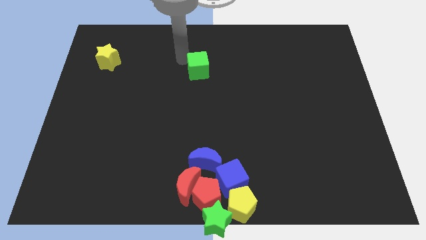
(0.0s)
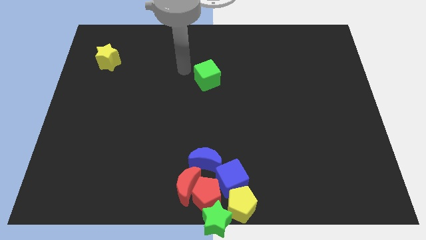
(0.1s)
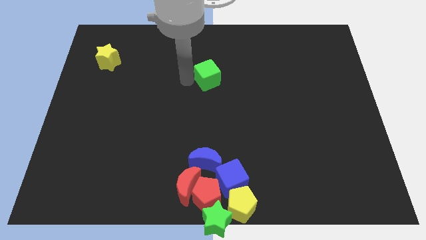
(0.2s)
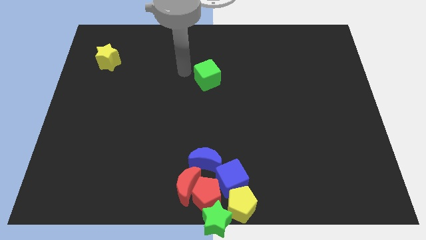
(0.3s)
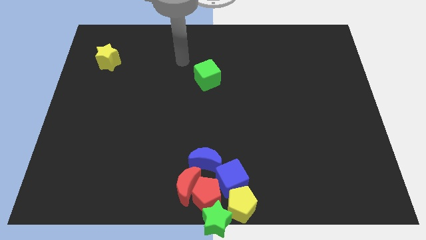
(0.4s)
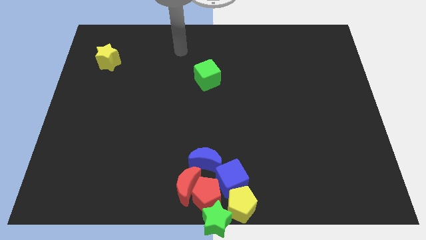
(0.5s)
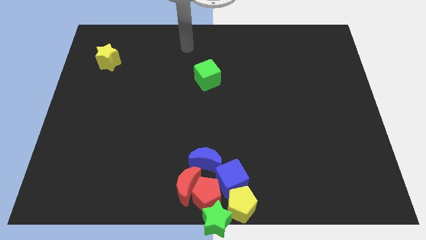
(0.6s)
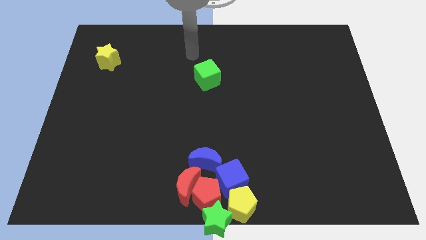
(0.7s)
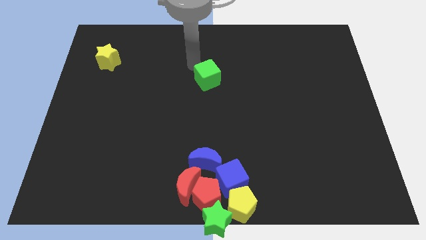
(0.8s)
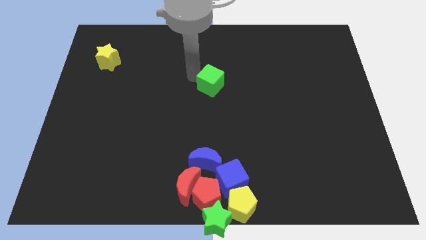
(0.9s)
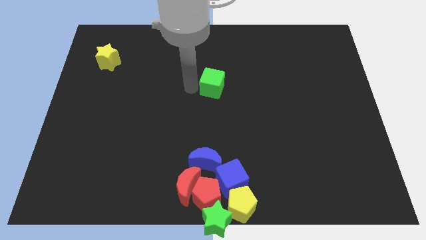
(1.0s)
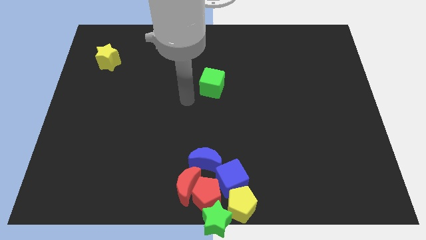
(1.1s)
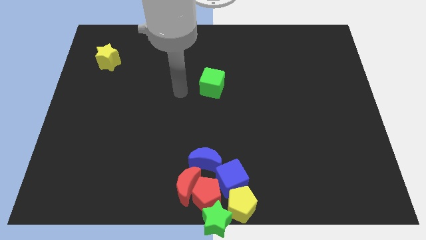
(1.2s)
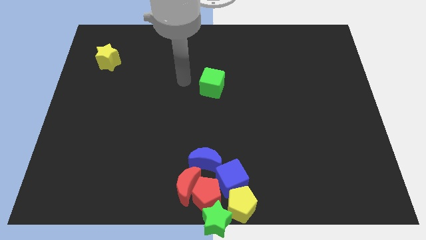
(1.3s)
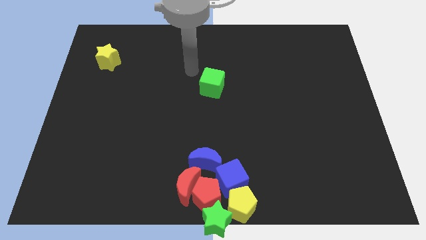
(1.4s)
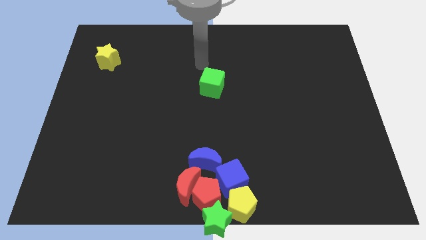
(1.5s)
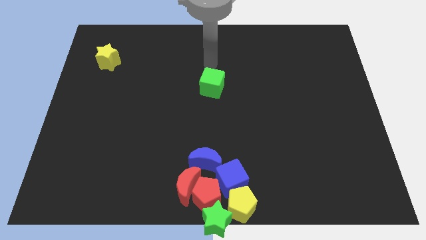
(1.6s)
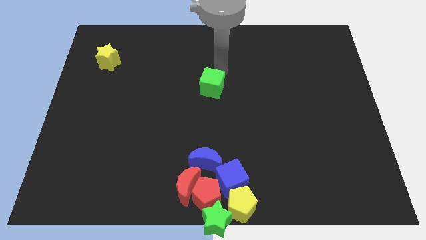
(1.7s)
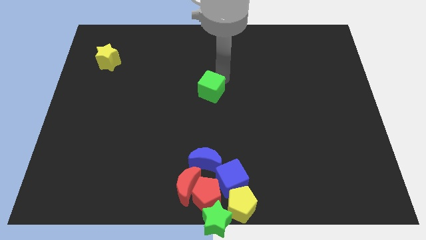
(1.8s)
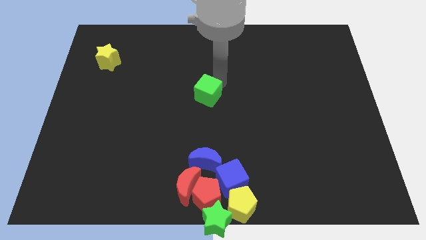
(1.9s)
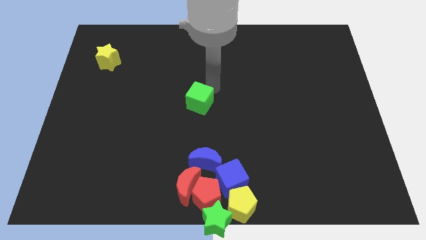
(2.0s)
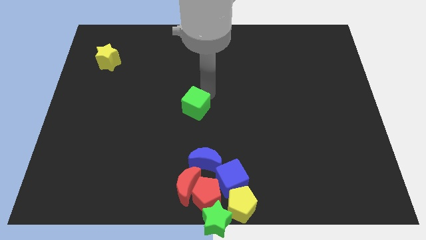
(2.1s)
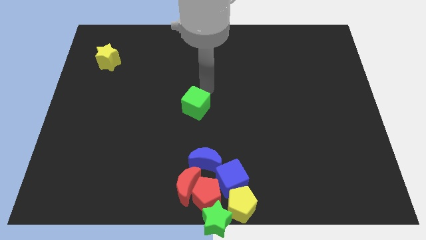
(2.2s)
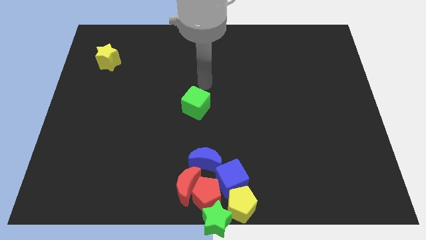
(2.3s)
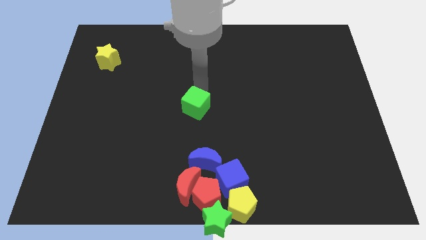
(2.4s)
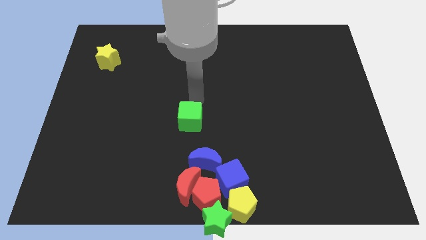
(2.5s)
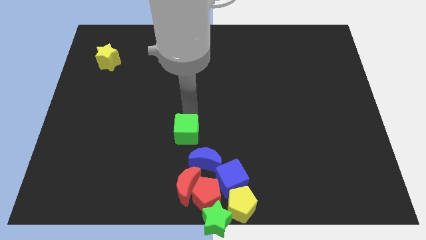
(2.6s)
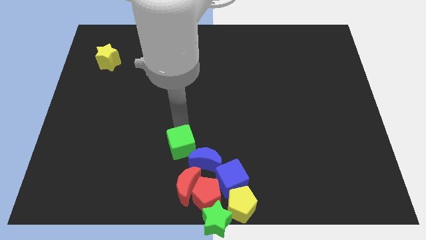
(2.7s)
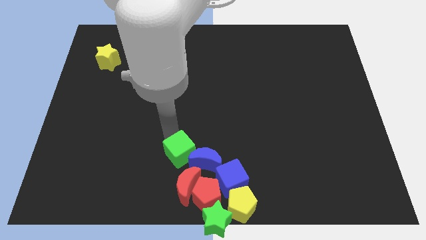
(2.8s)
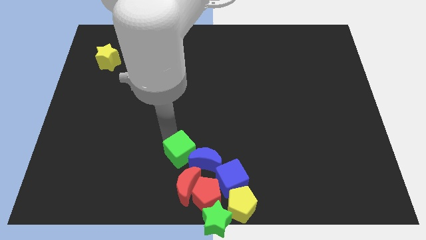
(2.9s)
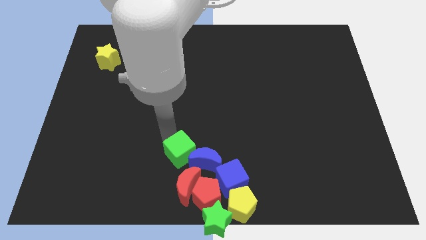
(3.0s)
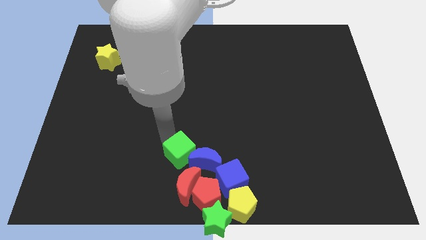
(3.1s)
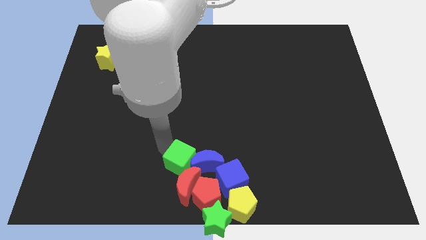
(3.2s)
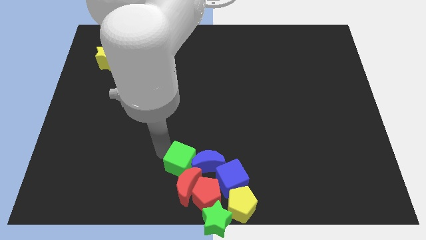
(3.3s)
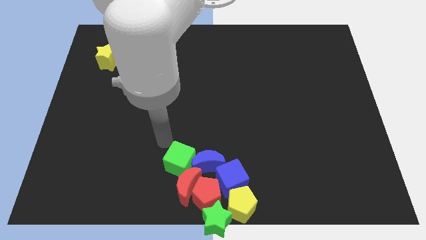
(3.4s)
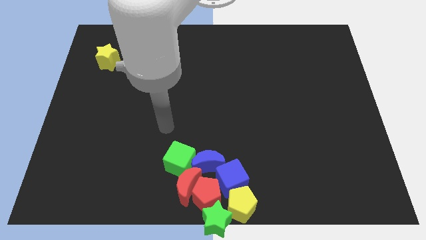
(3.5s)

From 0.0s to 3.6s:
group up all the blocks except yellow star

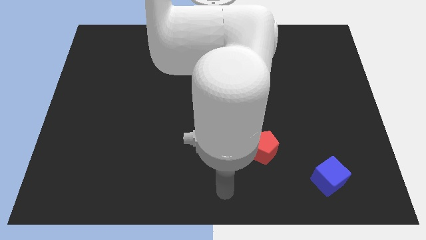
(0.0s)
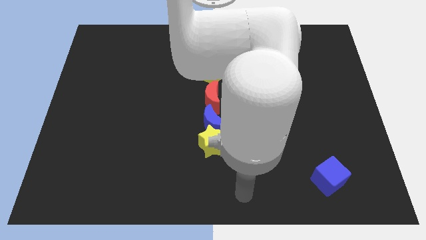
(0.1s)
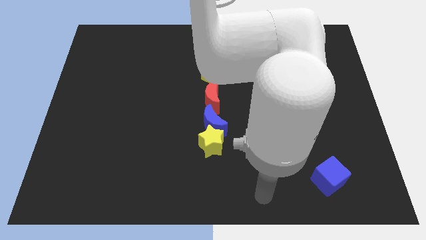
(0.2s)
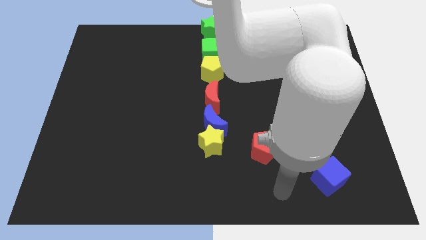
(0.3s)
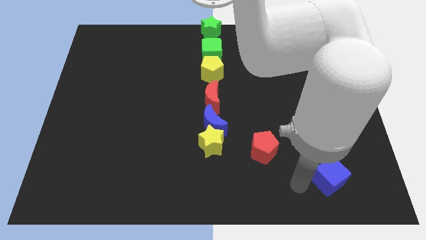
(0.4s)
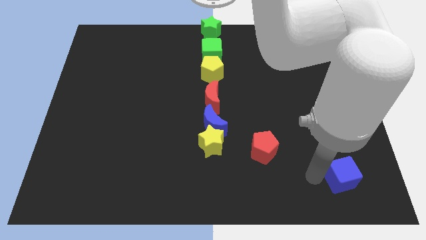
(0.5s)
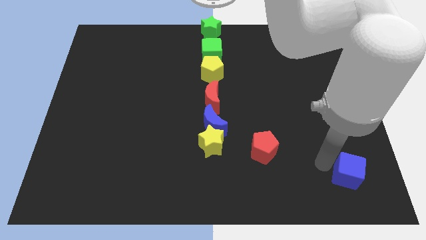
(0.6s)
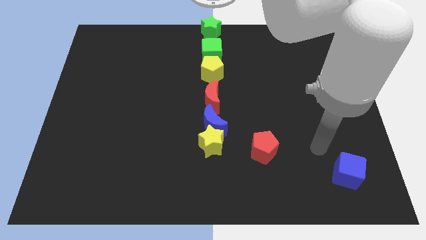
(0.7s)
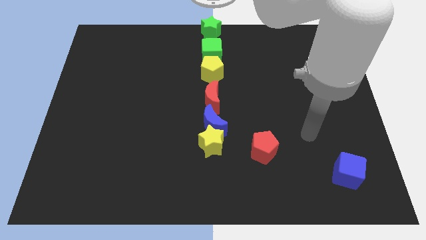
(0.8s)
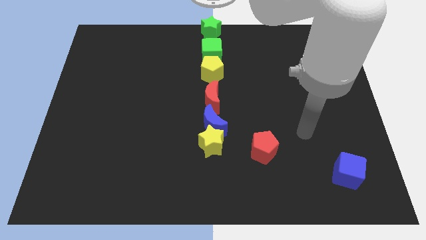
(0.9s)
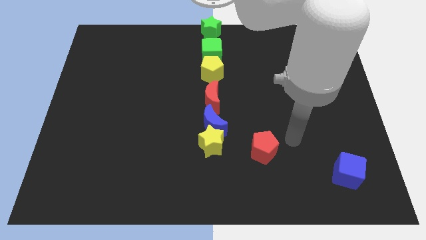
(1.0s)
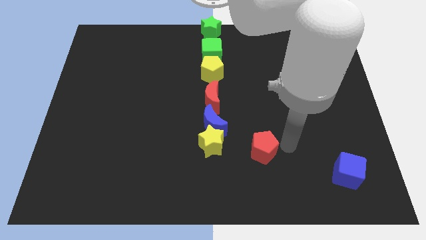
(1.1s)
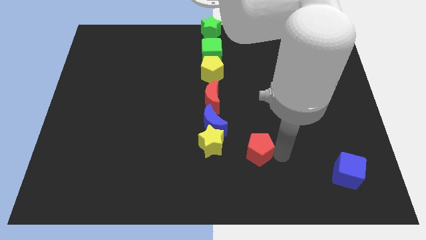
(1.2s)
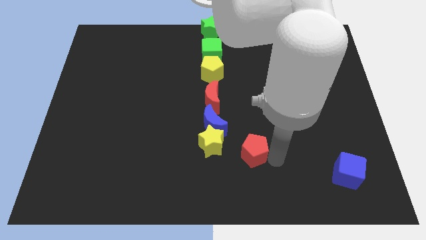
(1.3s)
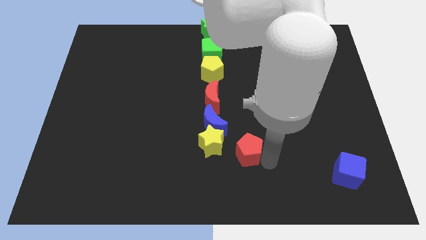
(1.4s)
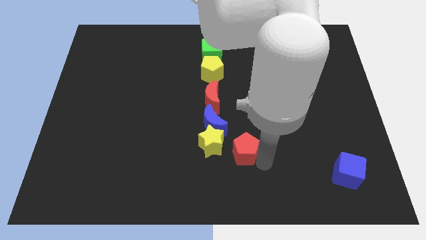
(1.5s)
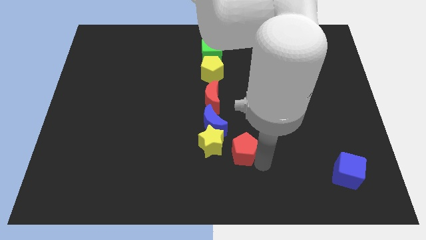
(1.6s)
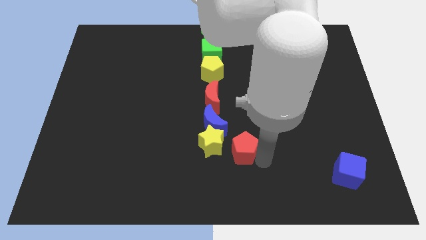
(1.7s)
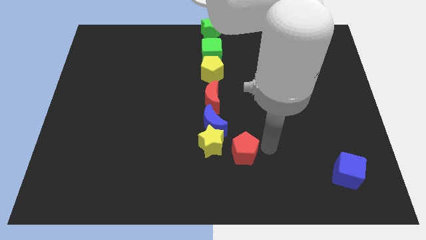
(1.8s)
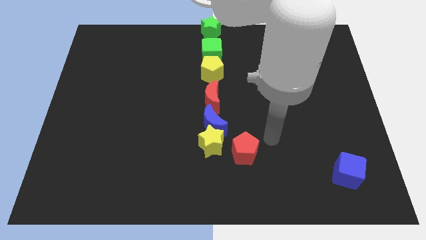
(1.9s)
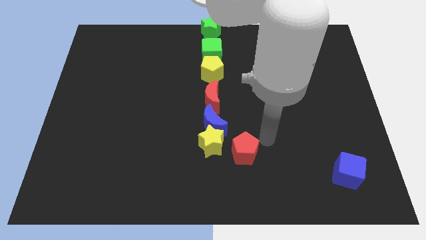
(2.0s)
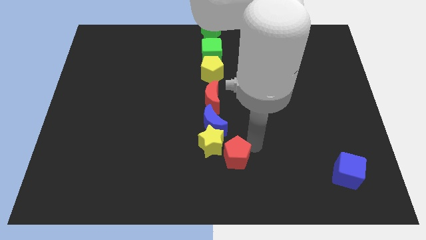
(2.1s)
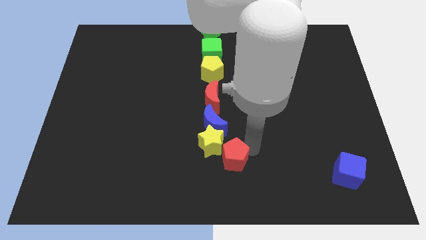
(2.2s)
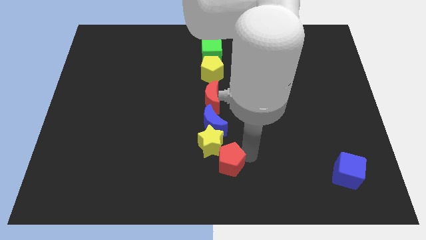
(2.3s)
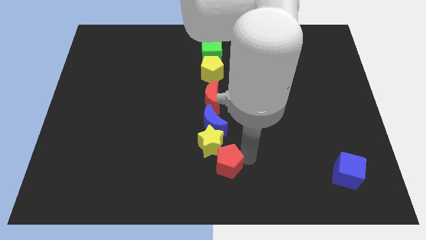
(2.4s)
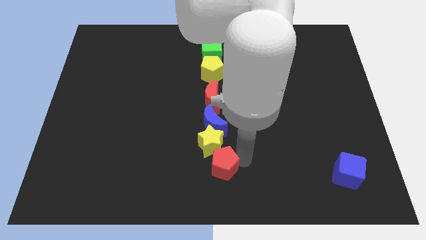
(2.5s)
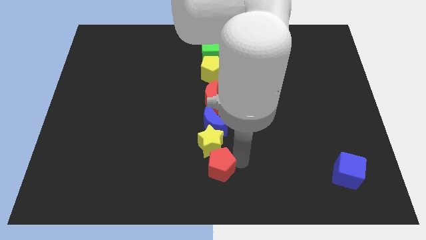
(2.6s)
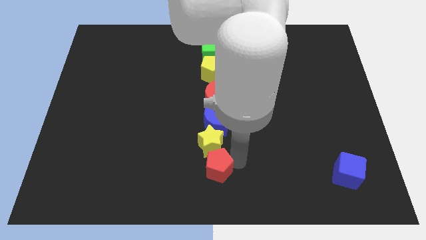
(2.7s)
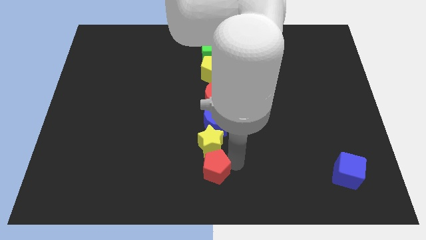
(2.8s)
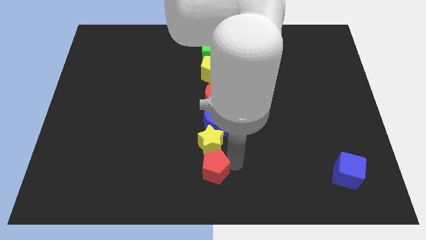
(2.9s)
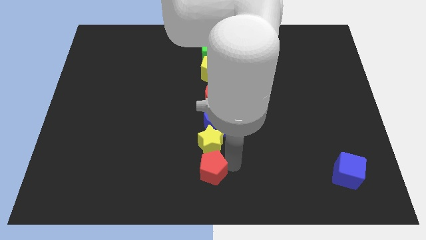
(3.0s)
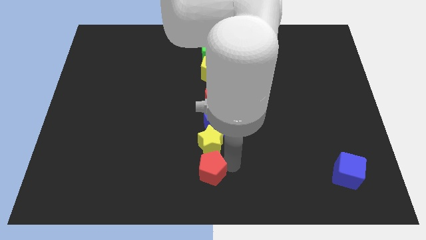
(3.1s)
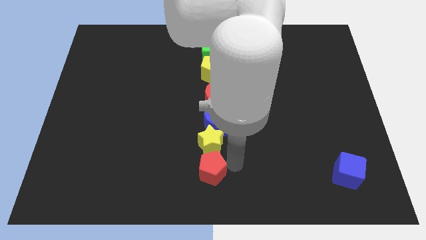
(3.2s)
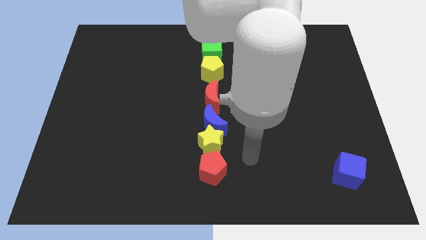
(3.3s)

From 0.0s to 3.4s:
push the blue cube and move the red pentagon below the yellow star

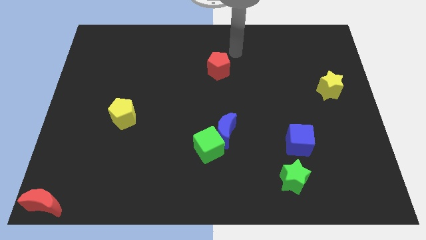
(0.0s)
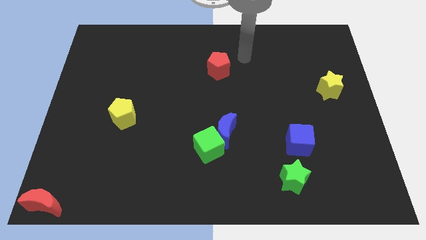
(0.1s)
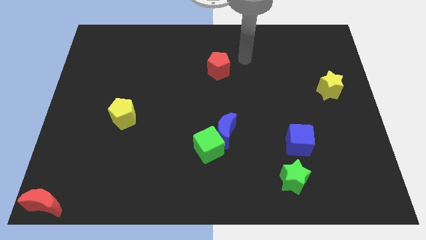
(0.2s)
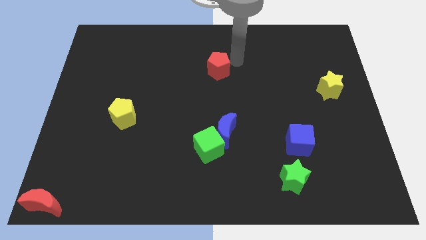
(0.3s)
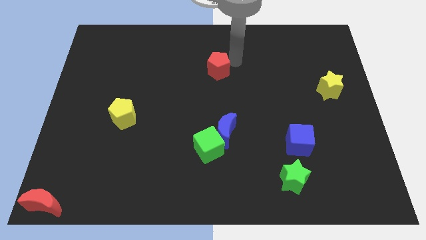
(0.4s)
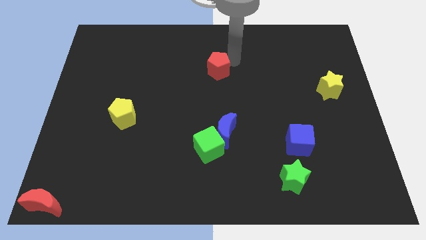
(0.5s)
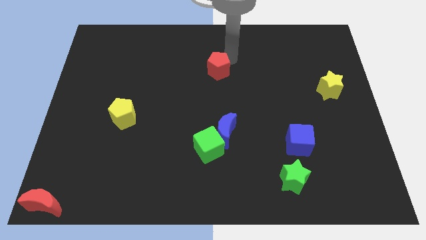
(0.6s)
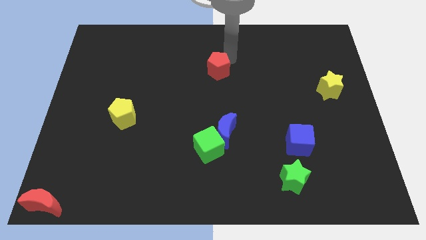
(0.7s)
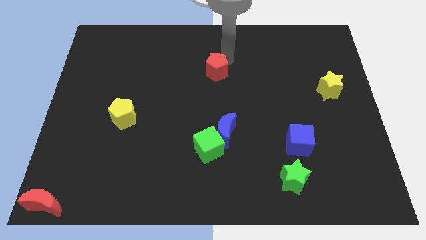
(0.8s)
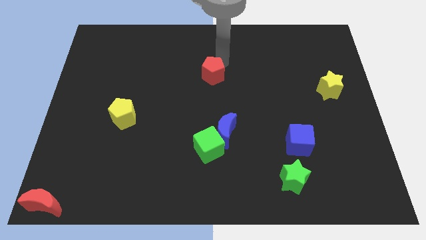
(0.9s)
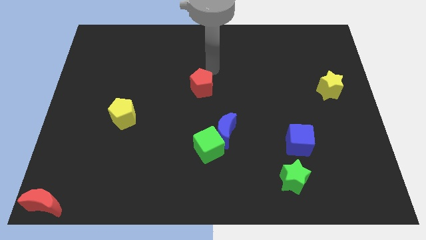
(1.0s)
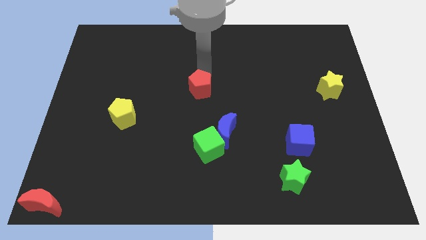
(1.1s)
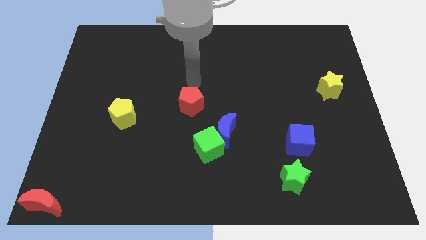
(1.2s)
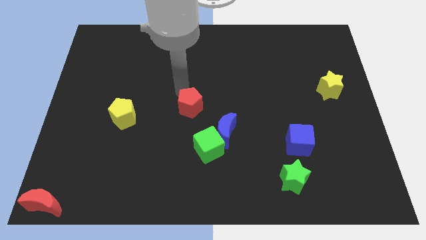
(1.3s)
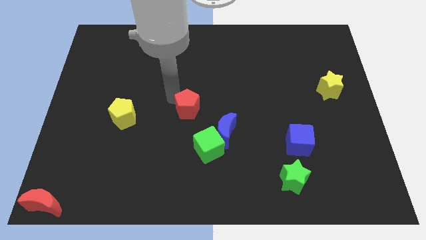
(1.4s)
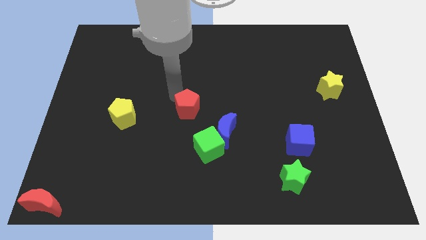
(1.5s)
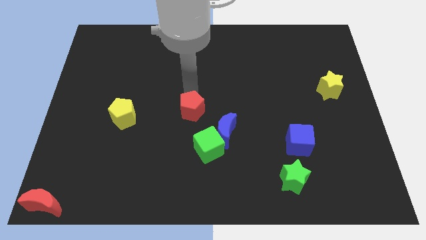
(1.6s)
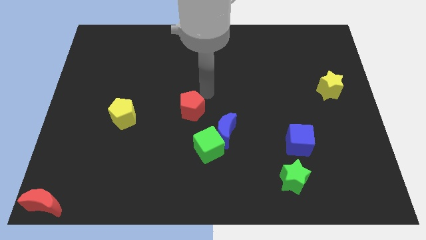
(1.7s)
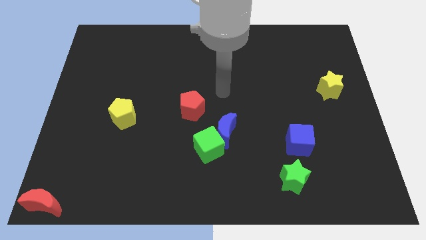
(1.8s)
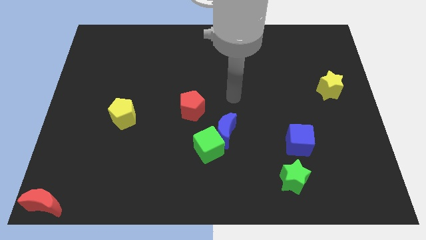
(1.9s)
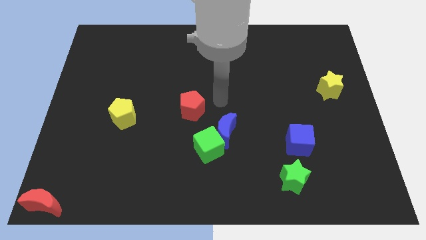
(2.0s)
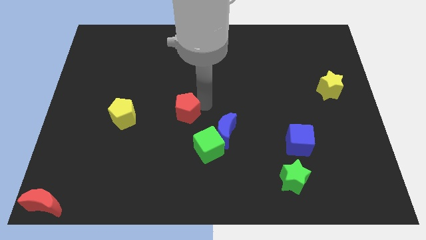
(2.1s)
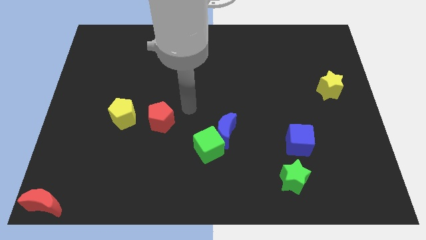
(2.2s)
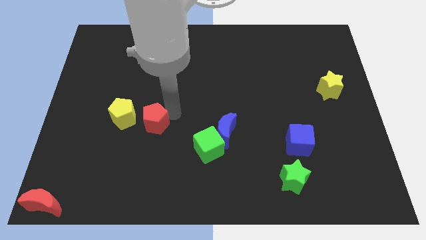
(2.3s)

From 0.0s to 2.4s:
place the red pentagon in between the yellow pentagon and green cube
